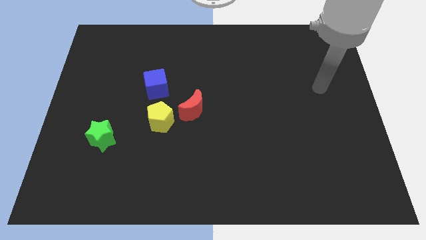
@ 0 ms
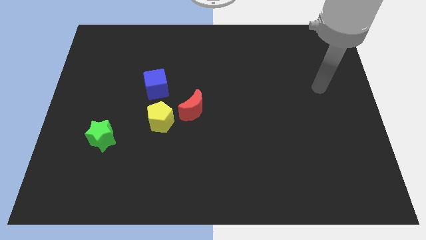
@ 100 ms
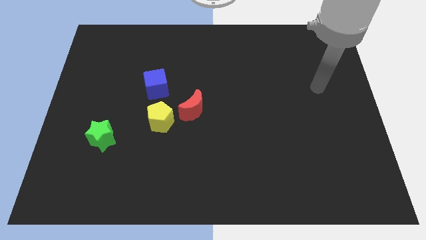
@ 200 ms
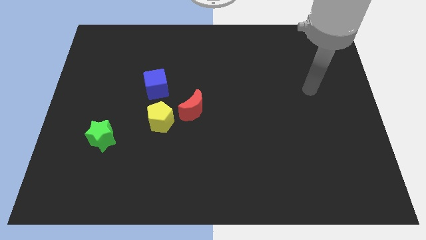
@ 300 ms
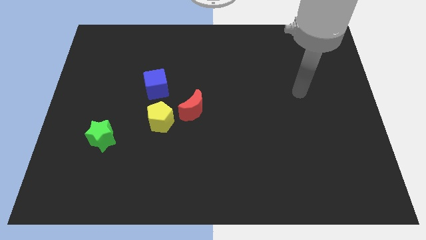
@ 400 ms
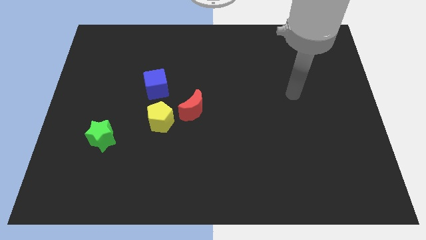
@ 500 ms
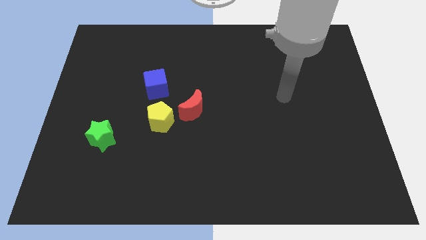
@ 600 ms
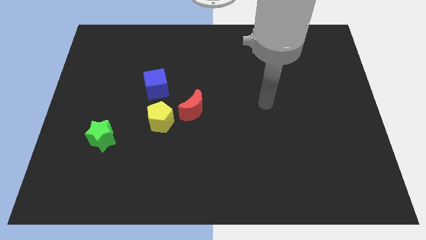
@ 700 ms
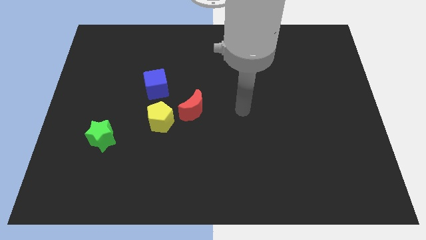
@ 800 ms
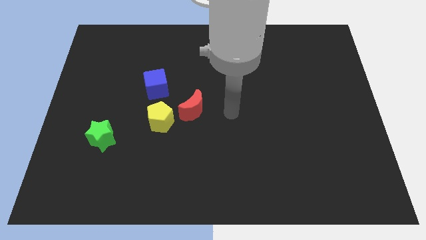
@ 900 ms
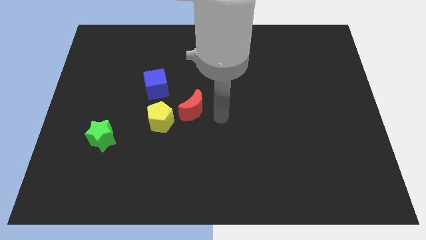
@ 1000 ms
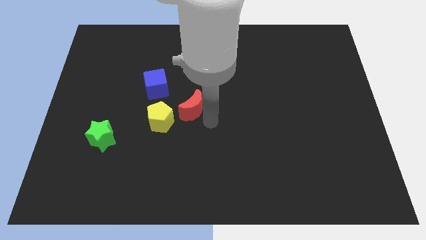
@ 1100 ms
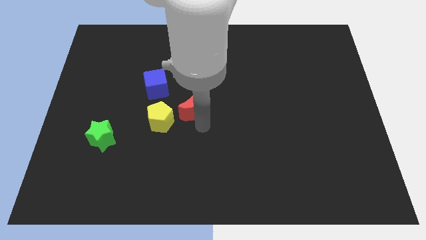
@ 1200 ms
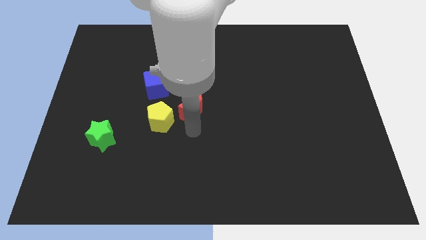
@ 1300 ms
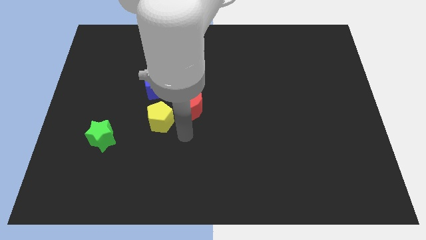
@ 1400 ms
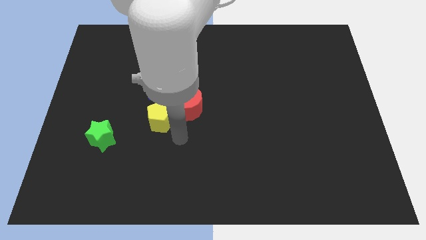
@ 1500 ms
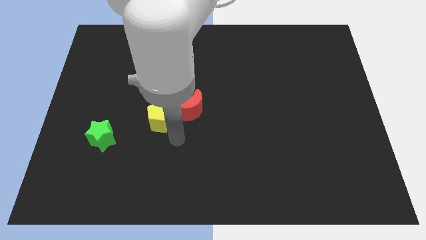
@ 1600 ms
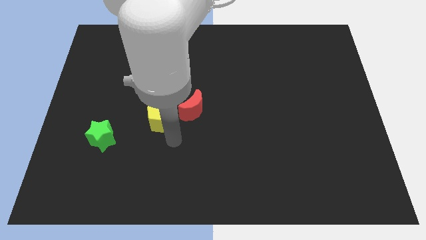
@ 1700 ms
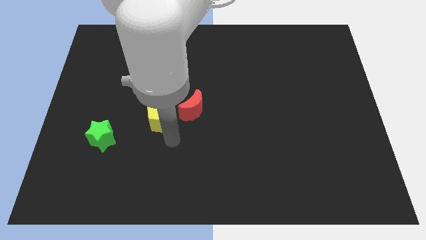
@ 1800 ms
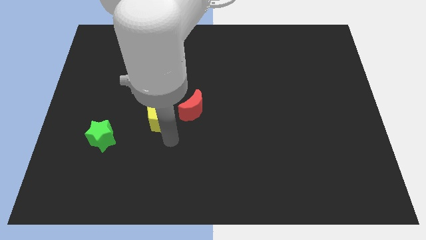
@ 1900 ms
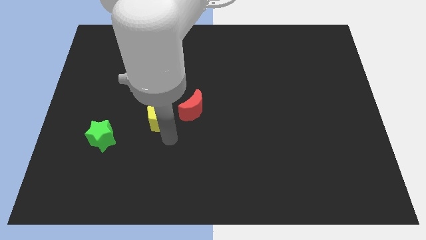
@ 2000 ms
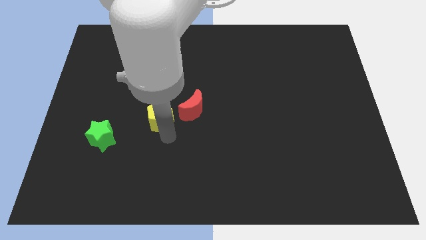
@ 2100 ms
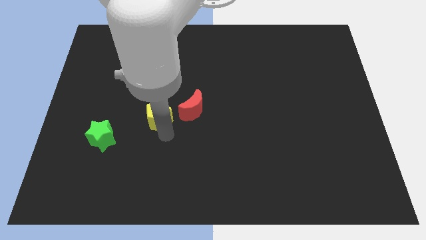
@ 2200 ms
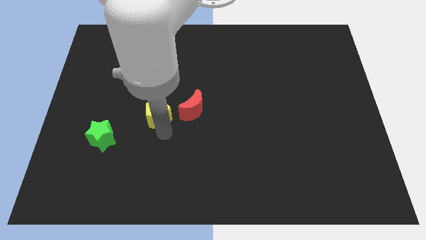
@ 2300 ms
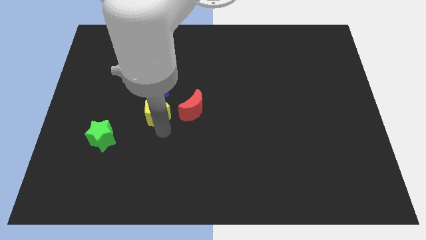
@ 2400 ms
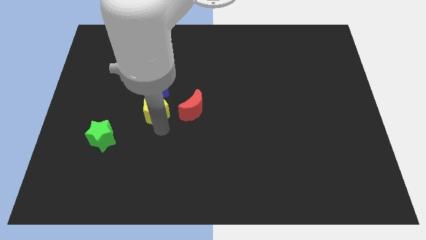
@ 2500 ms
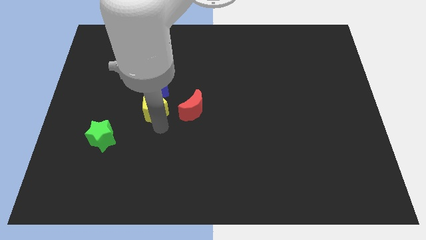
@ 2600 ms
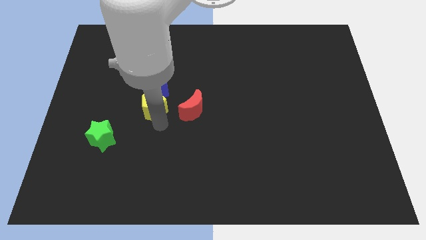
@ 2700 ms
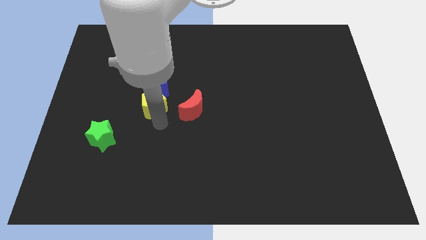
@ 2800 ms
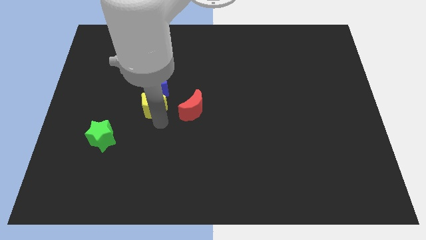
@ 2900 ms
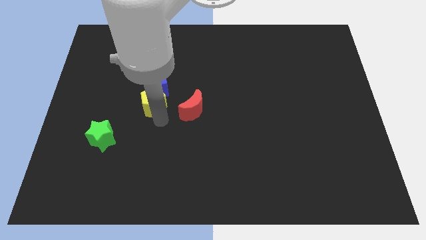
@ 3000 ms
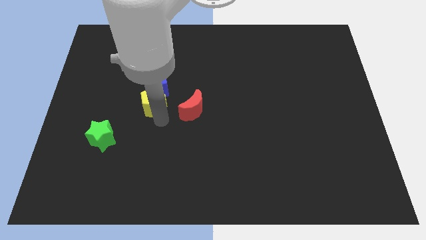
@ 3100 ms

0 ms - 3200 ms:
move the yellow block next to the blue block

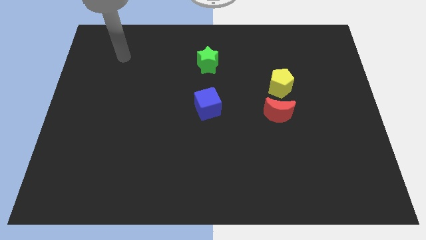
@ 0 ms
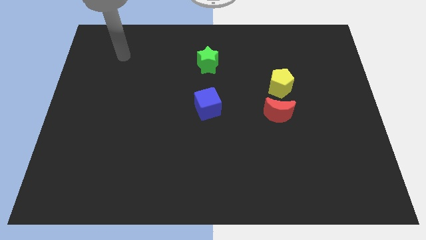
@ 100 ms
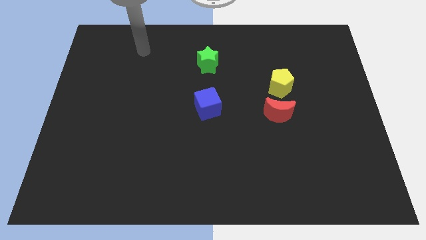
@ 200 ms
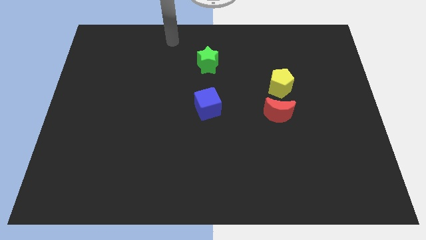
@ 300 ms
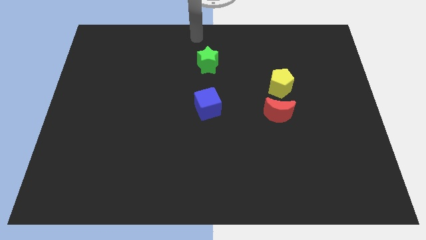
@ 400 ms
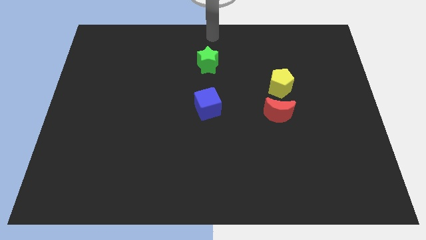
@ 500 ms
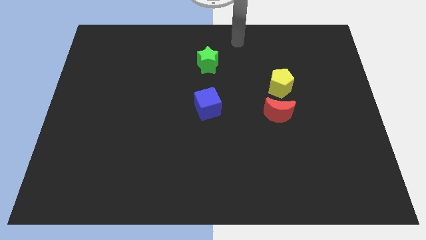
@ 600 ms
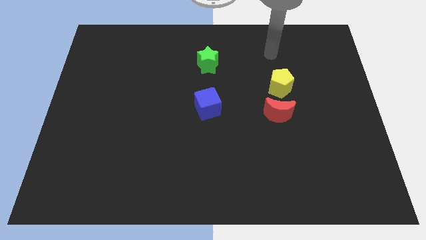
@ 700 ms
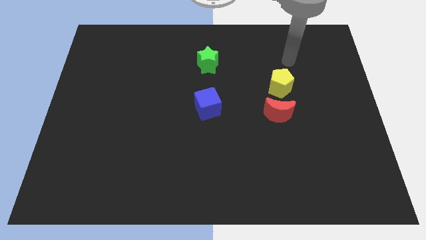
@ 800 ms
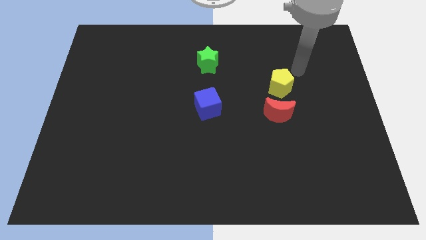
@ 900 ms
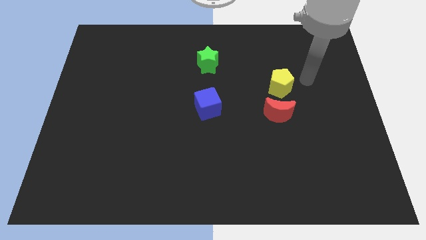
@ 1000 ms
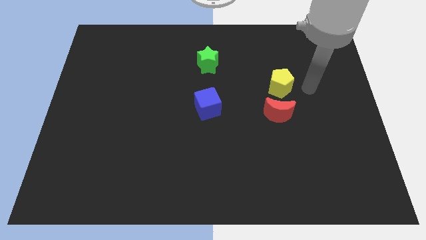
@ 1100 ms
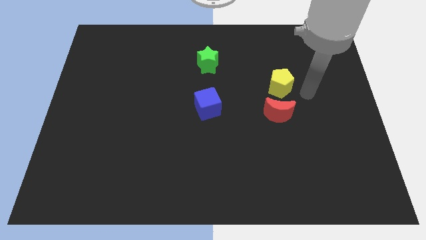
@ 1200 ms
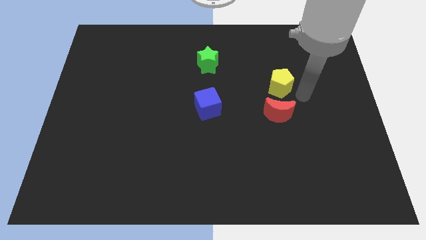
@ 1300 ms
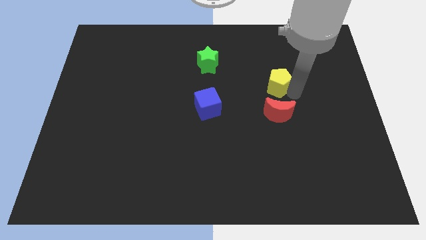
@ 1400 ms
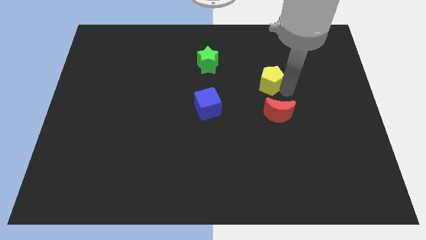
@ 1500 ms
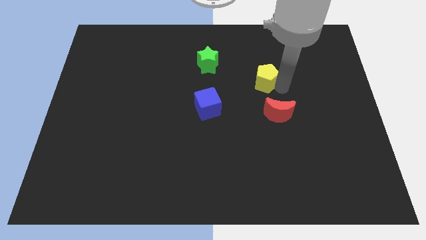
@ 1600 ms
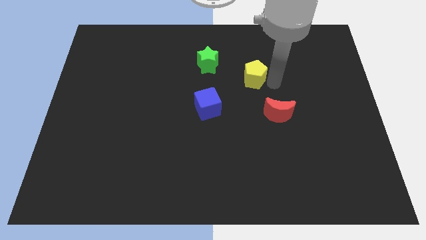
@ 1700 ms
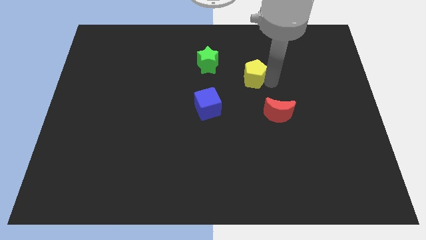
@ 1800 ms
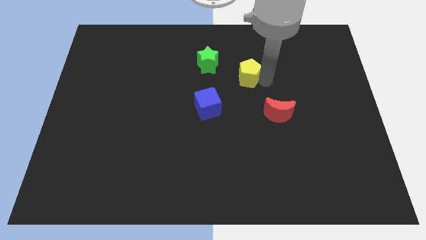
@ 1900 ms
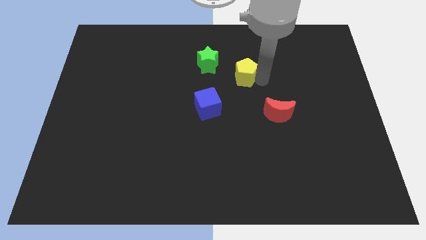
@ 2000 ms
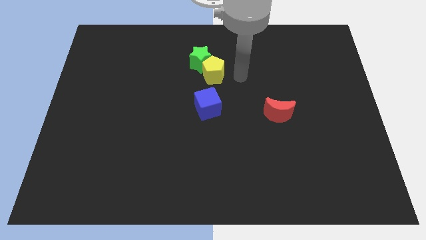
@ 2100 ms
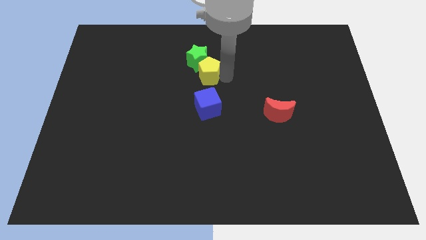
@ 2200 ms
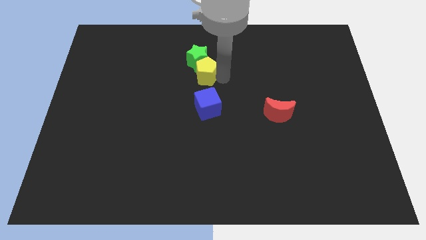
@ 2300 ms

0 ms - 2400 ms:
slide the yellow pentagon next to the star

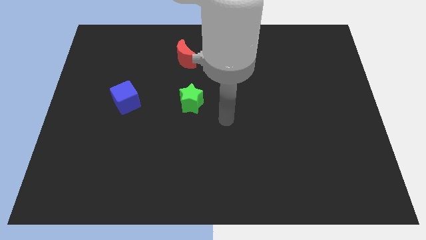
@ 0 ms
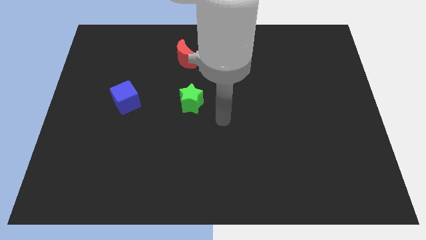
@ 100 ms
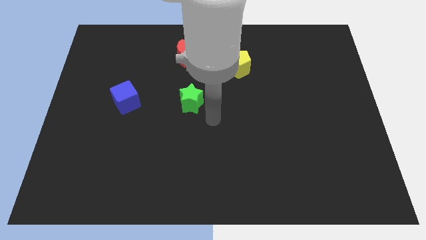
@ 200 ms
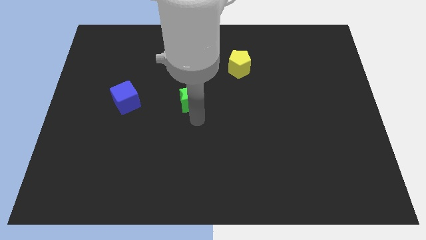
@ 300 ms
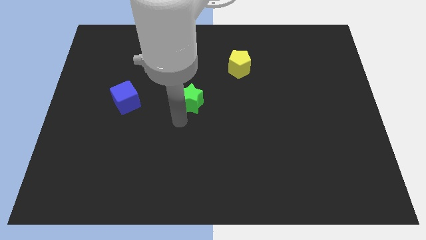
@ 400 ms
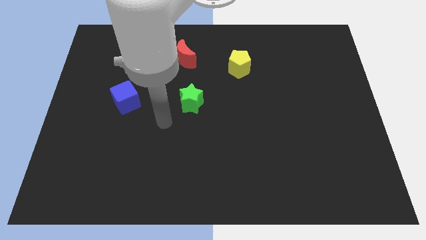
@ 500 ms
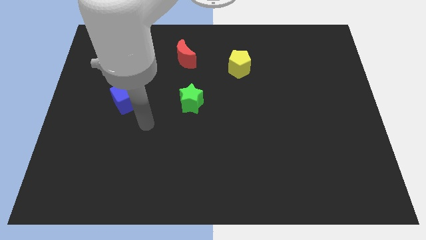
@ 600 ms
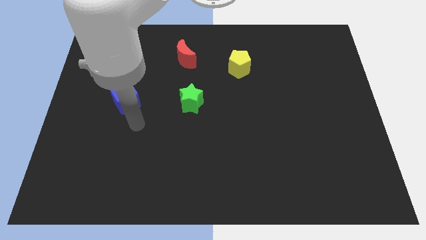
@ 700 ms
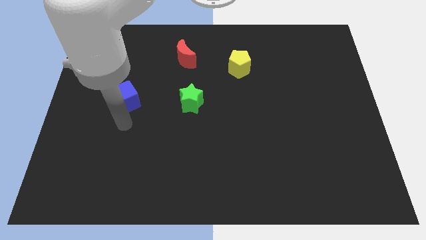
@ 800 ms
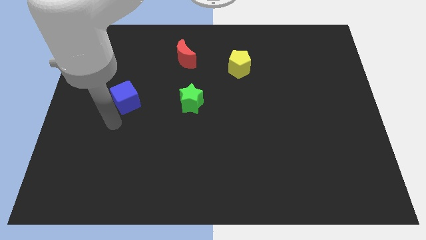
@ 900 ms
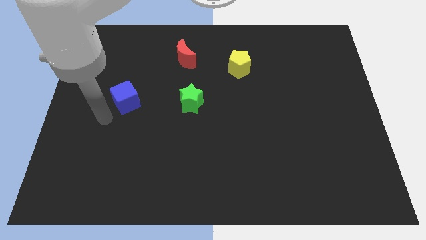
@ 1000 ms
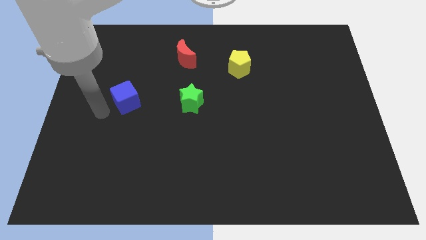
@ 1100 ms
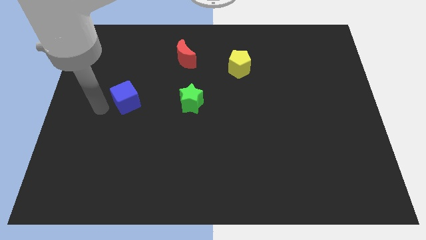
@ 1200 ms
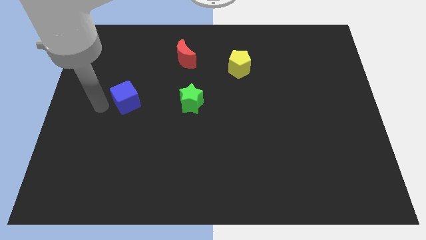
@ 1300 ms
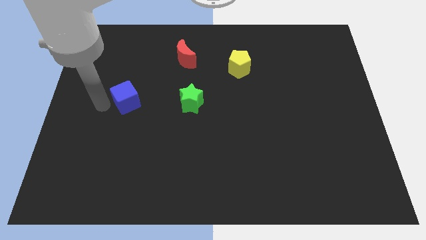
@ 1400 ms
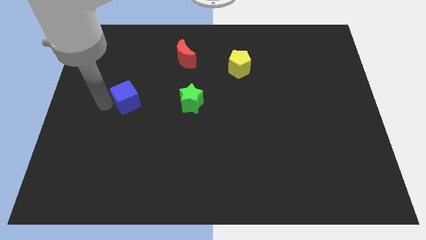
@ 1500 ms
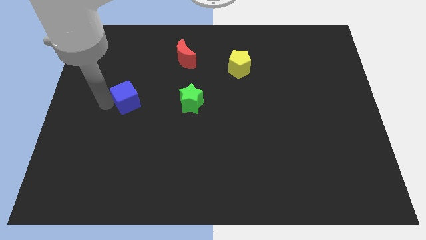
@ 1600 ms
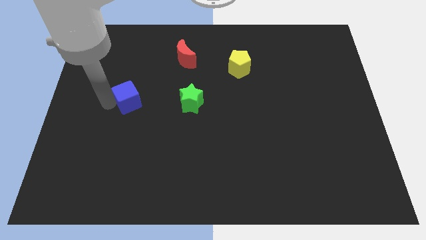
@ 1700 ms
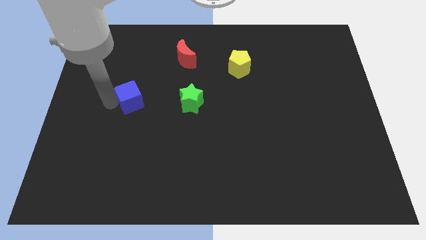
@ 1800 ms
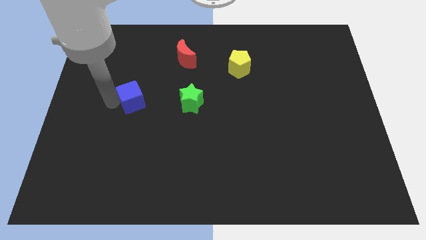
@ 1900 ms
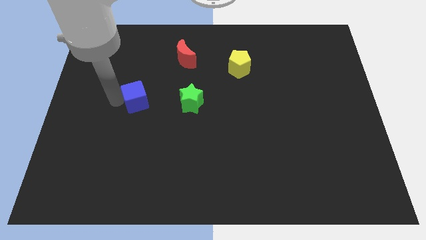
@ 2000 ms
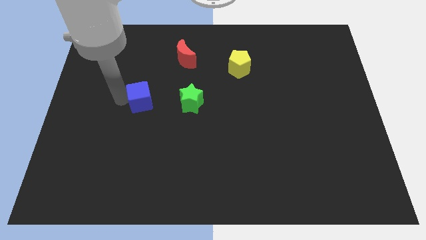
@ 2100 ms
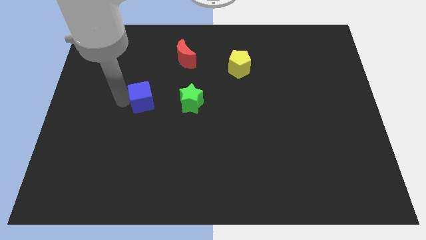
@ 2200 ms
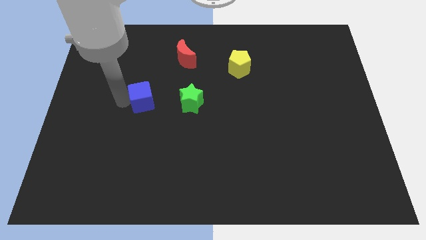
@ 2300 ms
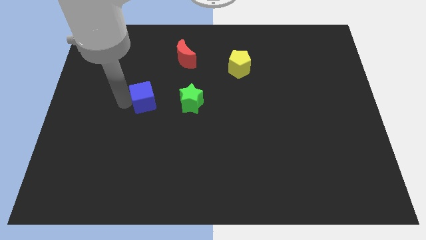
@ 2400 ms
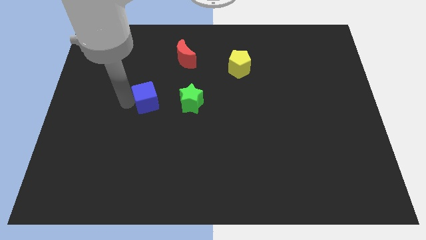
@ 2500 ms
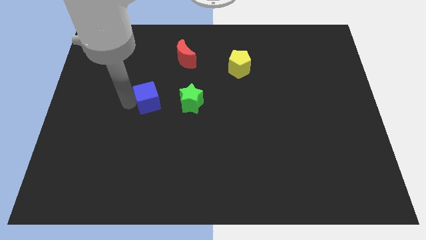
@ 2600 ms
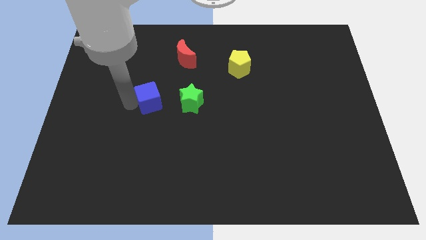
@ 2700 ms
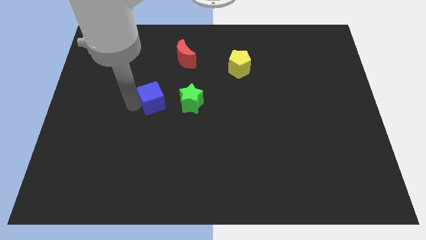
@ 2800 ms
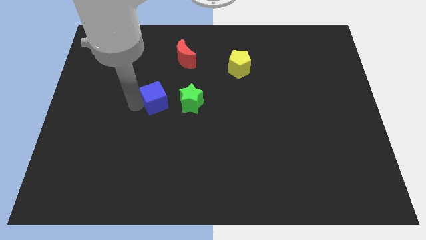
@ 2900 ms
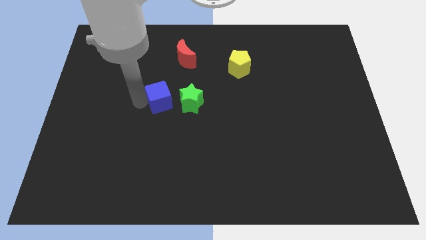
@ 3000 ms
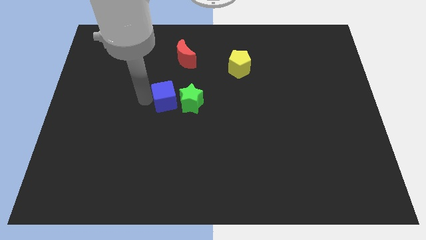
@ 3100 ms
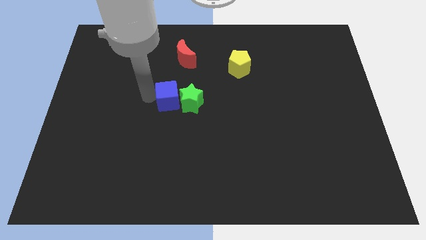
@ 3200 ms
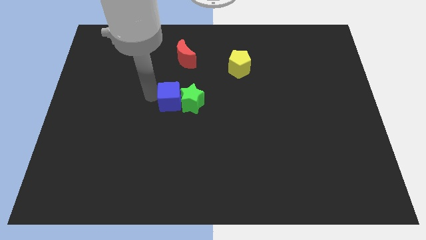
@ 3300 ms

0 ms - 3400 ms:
put the blue block to the star
